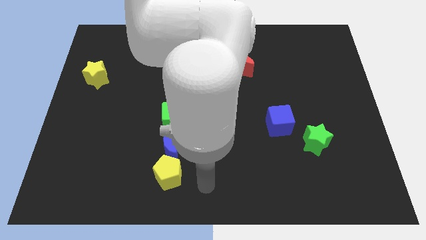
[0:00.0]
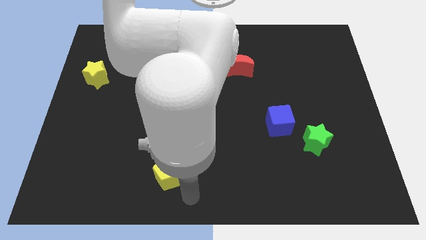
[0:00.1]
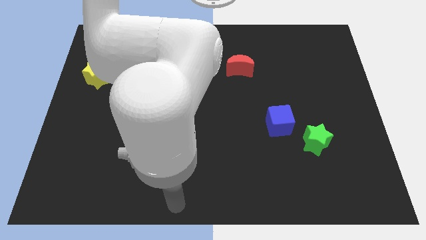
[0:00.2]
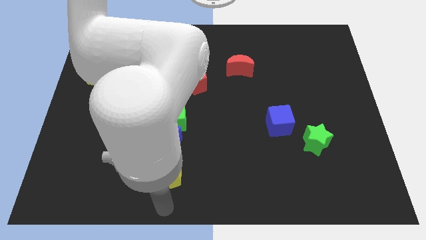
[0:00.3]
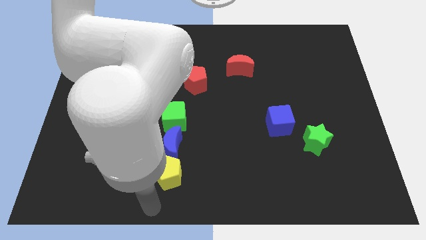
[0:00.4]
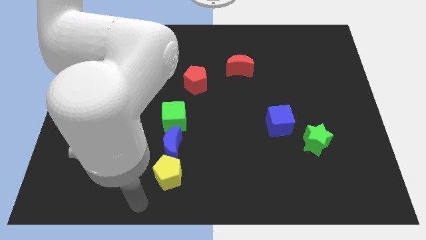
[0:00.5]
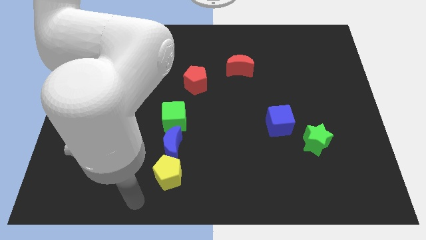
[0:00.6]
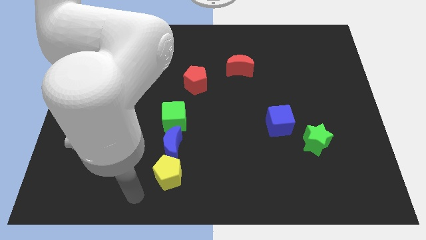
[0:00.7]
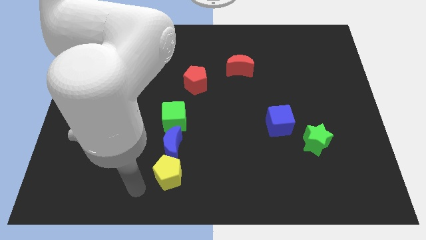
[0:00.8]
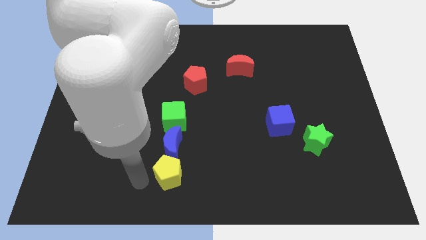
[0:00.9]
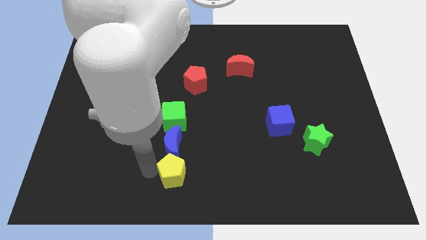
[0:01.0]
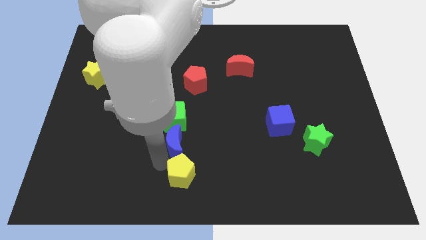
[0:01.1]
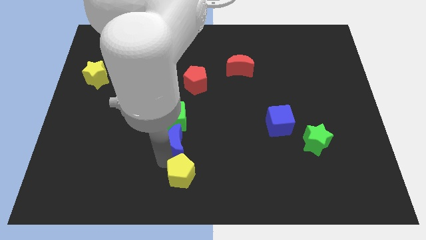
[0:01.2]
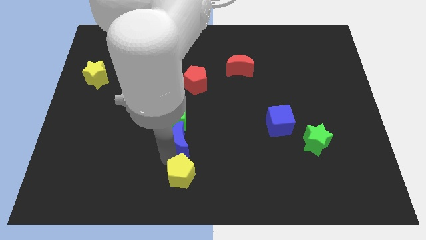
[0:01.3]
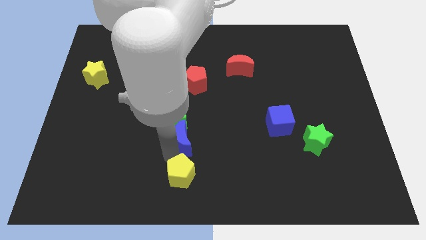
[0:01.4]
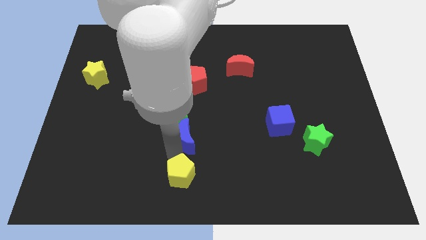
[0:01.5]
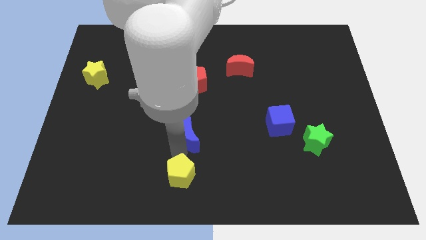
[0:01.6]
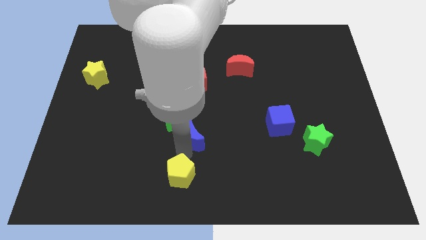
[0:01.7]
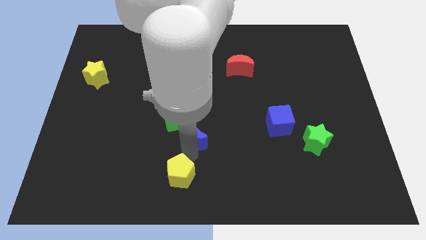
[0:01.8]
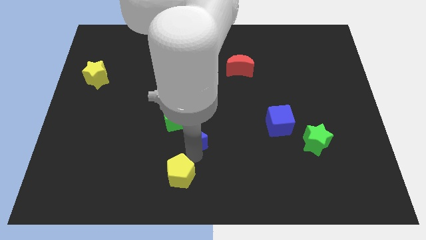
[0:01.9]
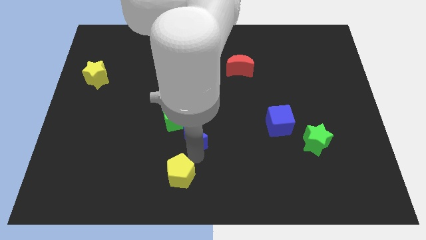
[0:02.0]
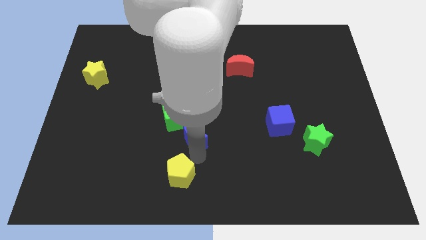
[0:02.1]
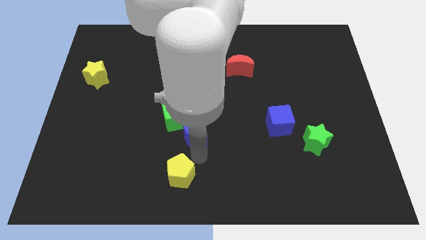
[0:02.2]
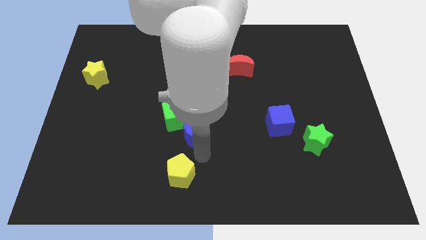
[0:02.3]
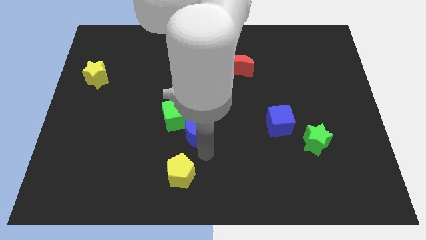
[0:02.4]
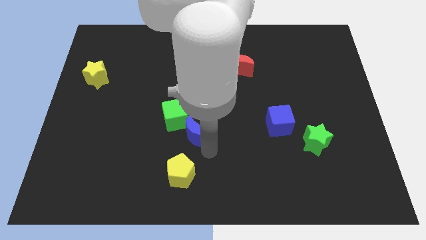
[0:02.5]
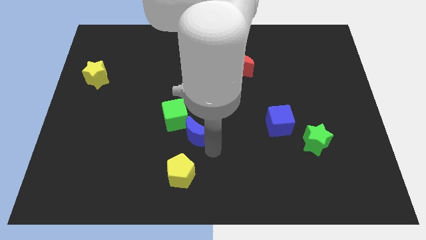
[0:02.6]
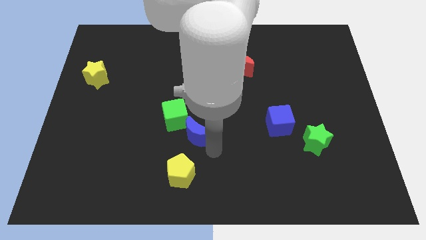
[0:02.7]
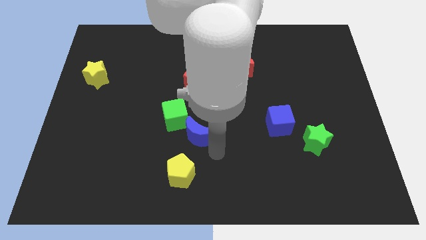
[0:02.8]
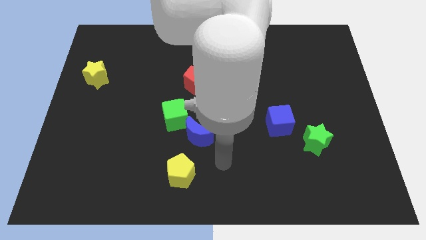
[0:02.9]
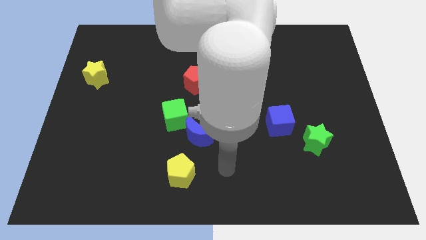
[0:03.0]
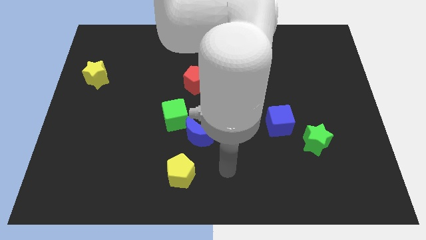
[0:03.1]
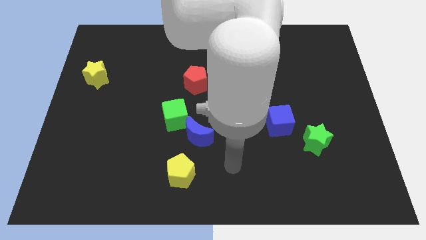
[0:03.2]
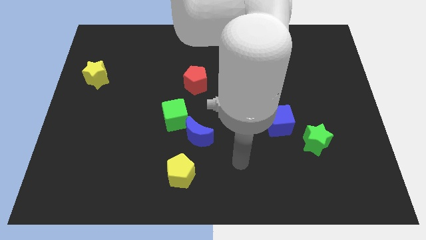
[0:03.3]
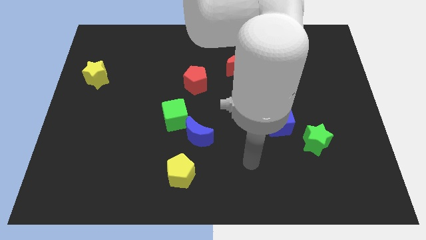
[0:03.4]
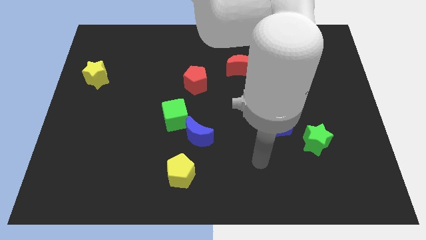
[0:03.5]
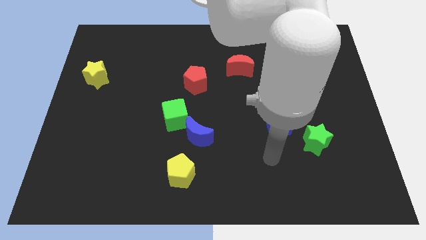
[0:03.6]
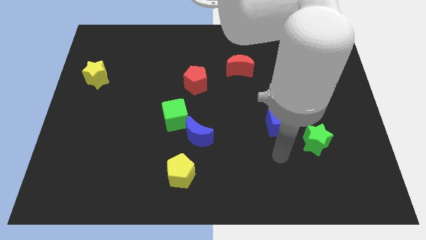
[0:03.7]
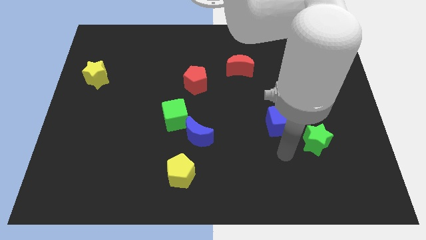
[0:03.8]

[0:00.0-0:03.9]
separate the yellow pentagon and the blue crescent

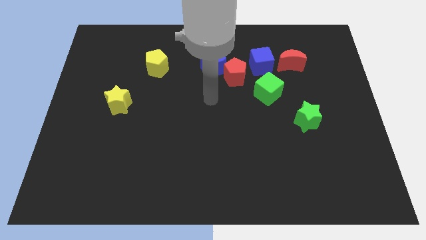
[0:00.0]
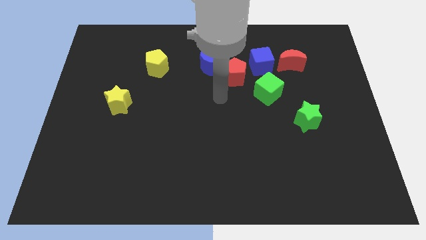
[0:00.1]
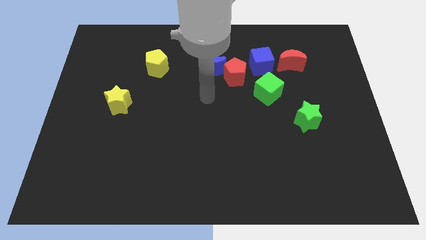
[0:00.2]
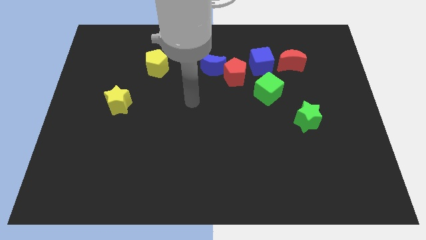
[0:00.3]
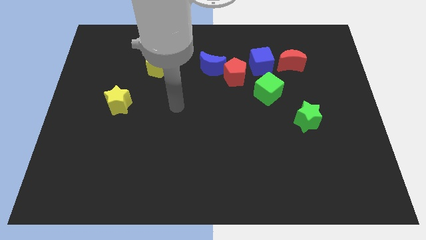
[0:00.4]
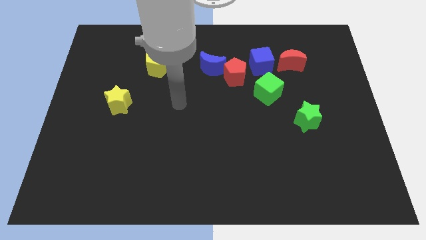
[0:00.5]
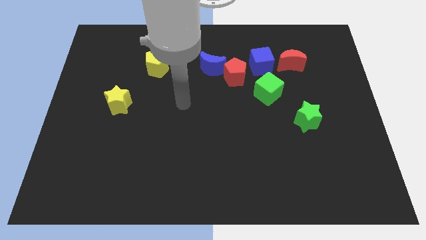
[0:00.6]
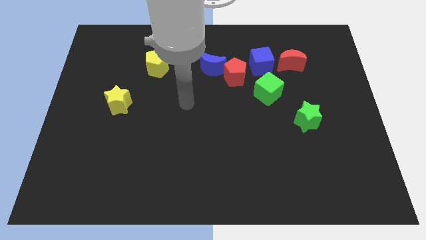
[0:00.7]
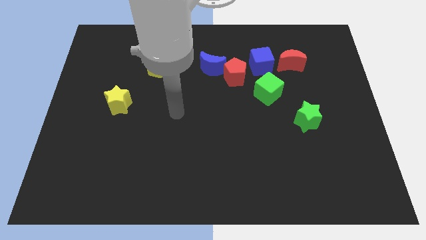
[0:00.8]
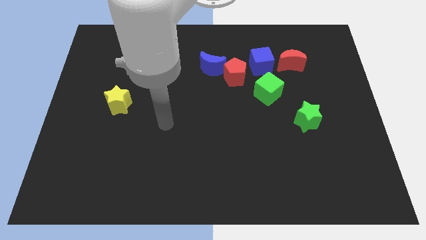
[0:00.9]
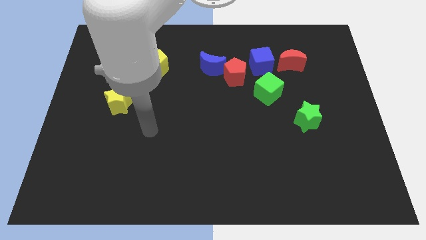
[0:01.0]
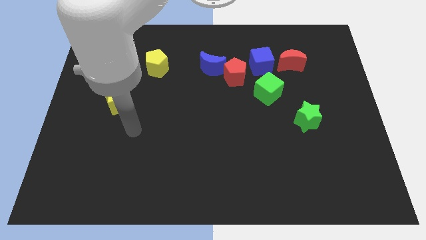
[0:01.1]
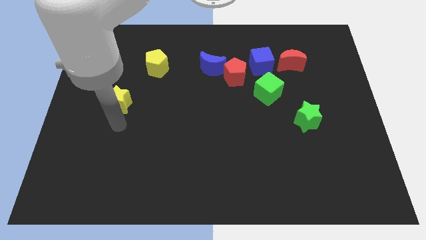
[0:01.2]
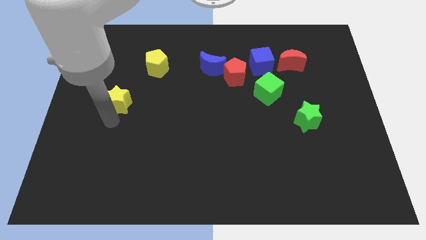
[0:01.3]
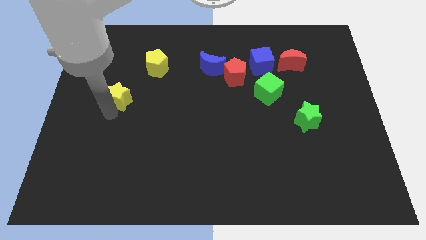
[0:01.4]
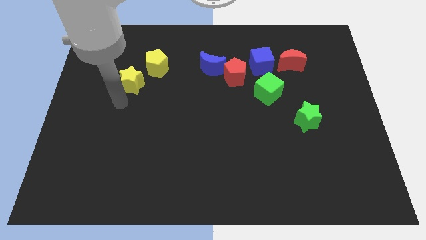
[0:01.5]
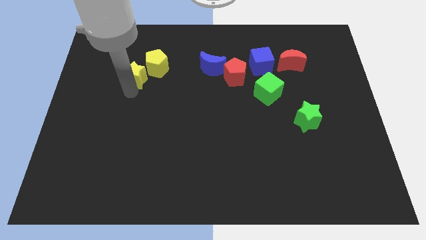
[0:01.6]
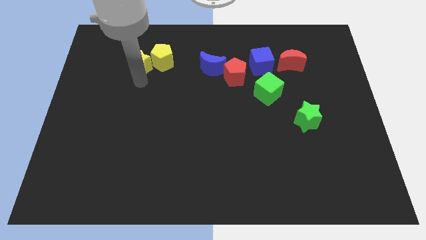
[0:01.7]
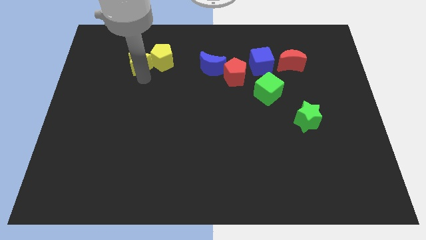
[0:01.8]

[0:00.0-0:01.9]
push the yellow star into the yellow pentagon

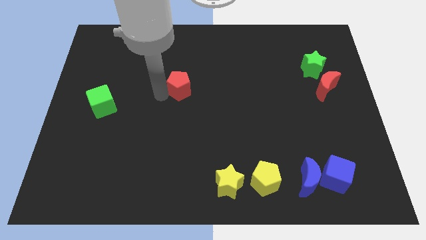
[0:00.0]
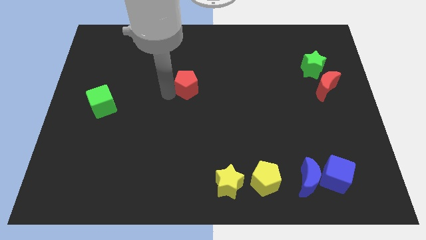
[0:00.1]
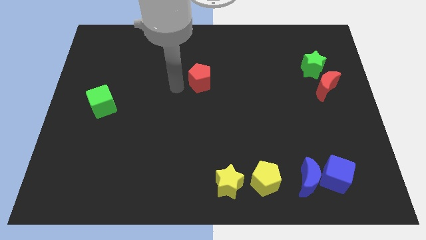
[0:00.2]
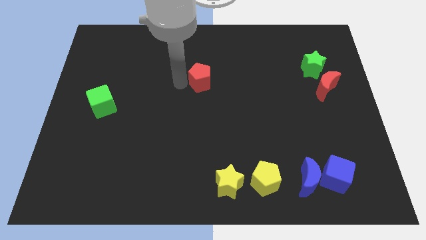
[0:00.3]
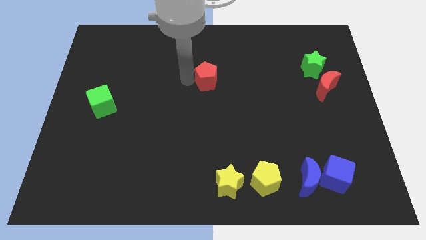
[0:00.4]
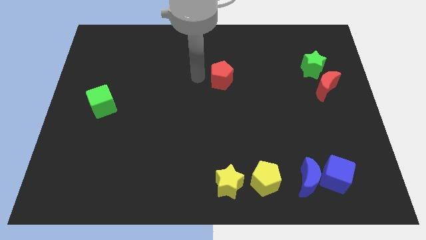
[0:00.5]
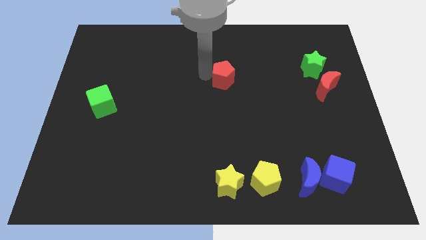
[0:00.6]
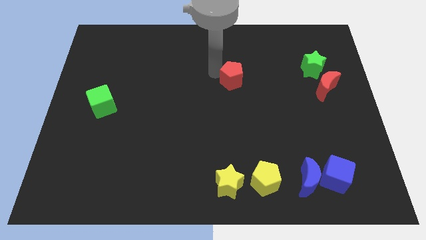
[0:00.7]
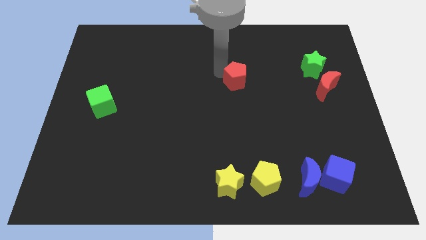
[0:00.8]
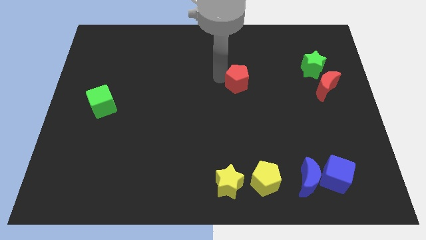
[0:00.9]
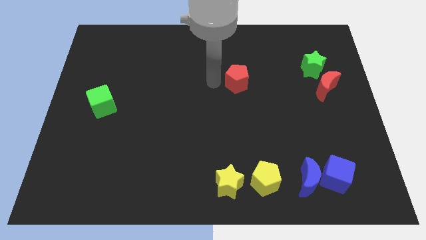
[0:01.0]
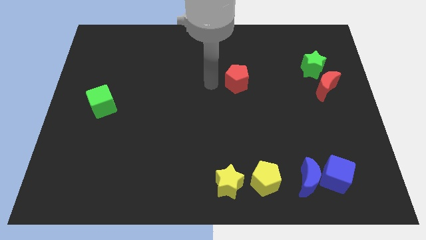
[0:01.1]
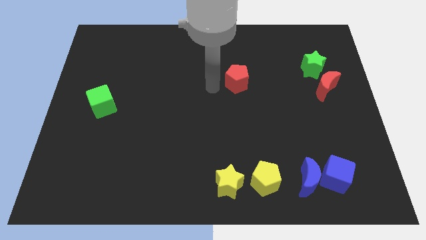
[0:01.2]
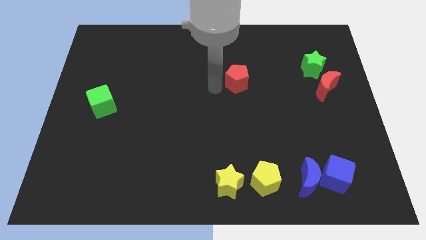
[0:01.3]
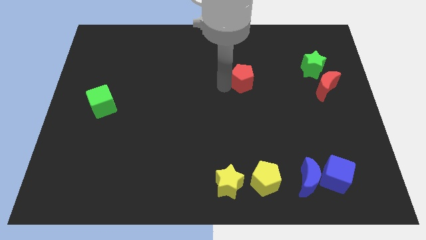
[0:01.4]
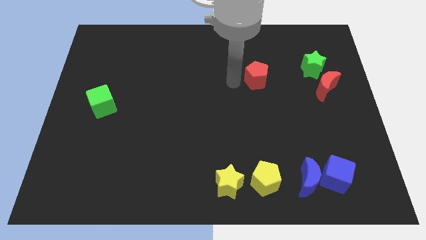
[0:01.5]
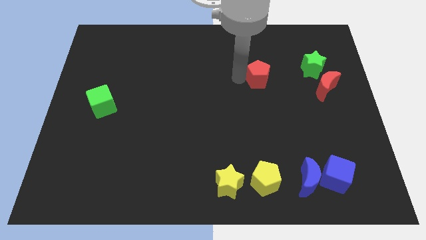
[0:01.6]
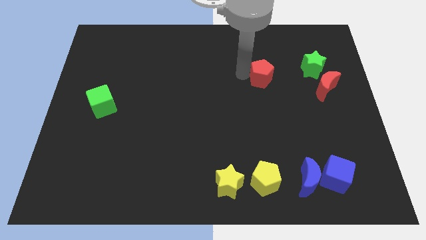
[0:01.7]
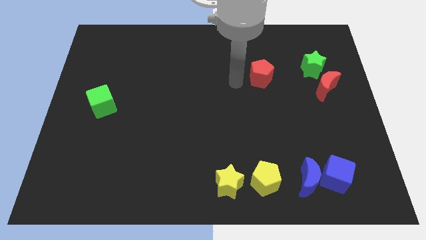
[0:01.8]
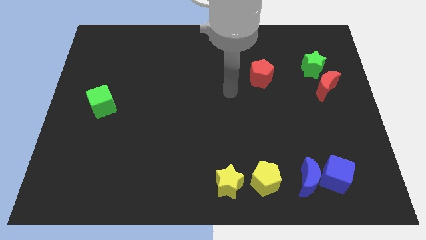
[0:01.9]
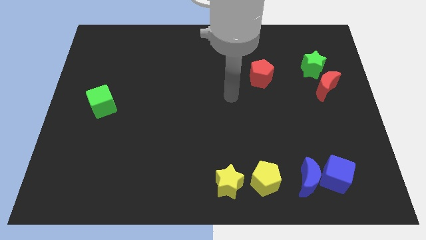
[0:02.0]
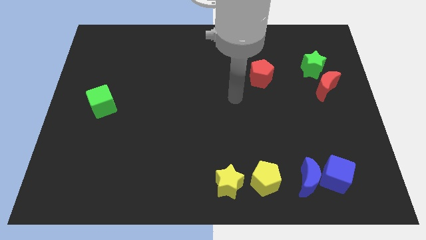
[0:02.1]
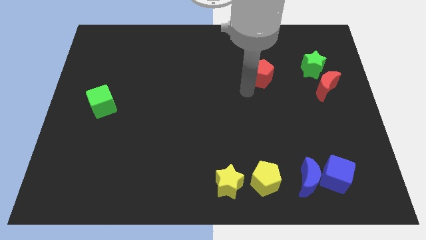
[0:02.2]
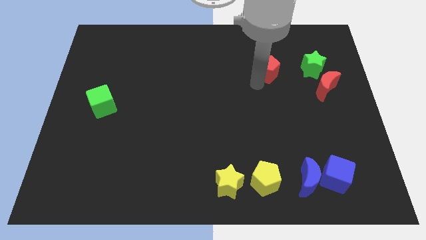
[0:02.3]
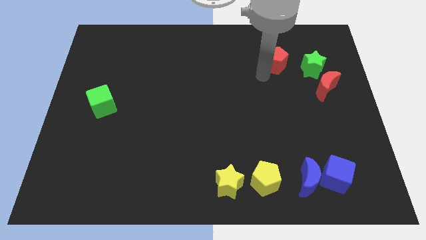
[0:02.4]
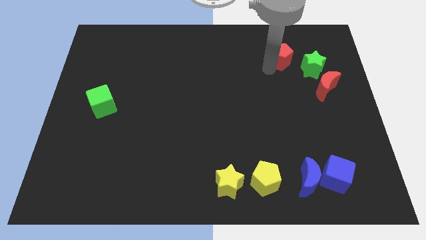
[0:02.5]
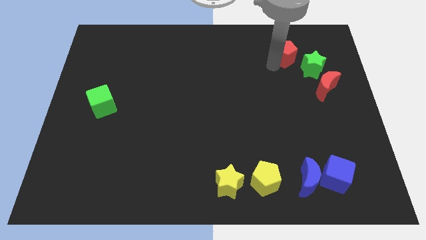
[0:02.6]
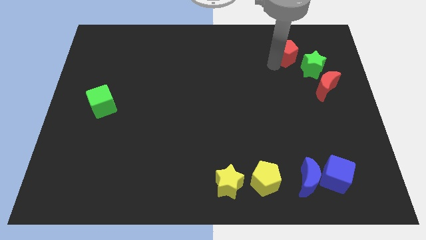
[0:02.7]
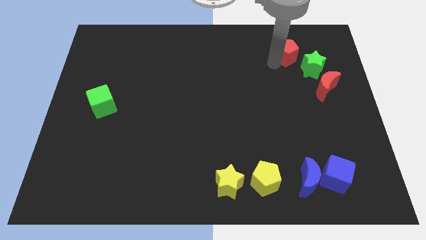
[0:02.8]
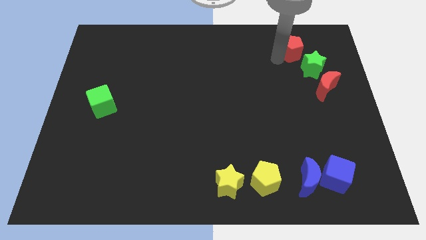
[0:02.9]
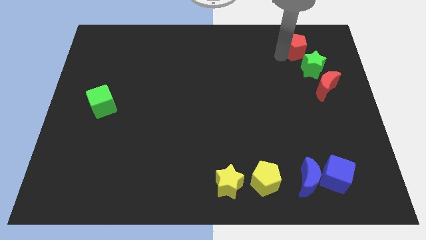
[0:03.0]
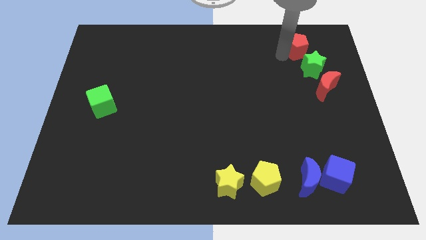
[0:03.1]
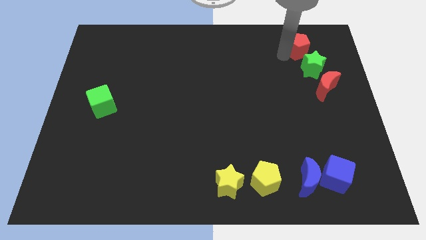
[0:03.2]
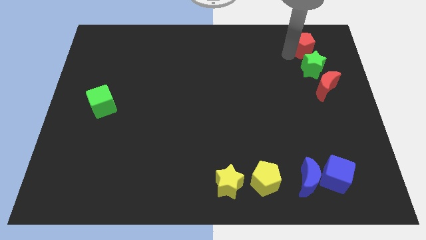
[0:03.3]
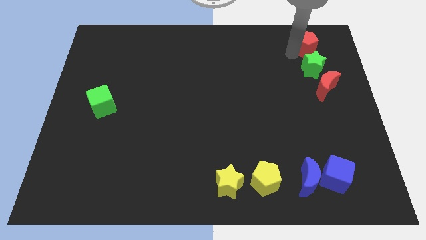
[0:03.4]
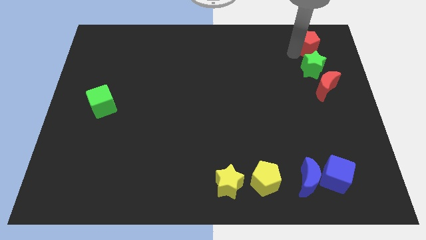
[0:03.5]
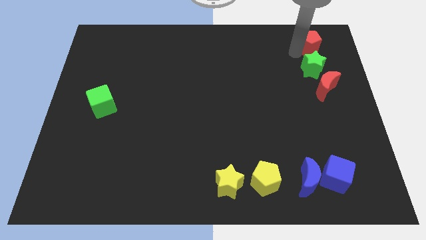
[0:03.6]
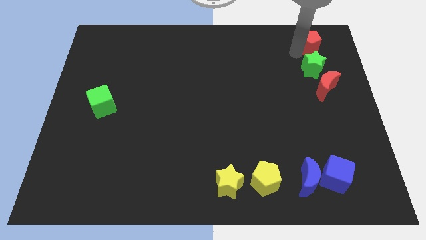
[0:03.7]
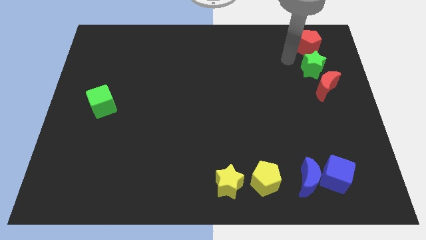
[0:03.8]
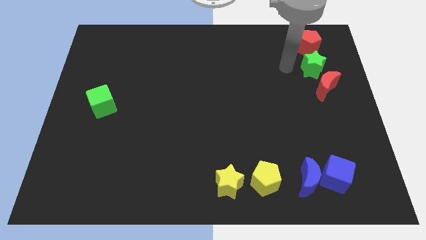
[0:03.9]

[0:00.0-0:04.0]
place red pentagon to the top of green star
